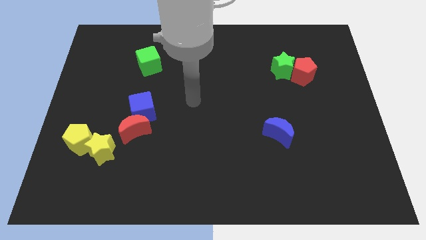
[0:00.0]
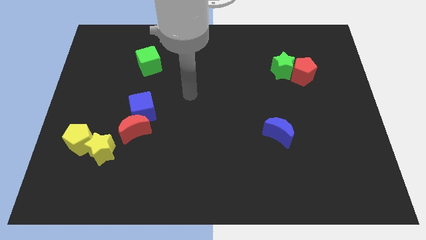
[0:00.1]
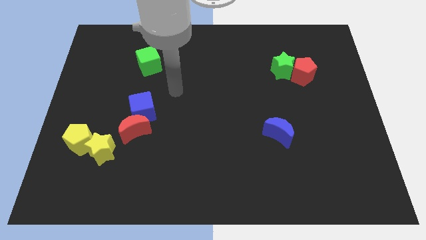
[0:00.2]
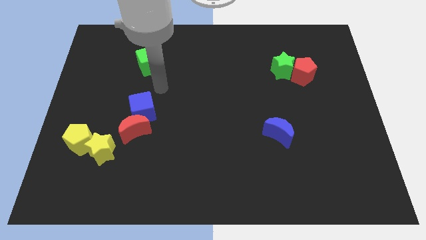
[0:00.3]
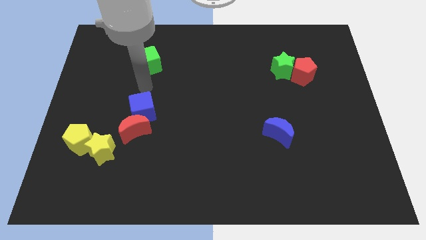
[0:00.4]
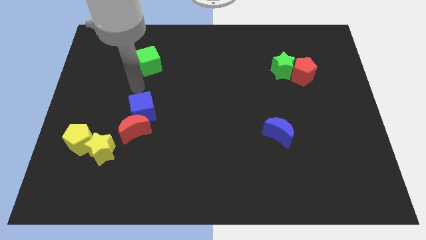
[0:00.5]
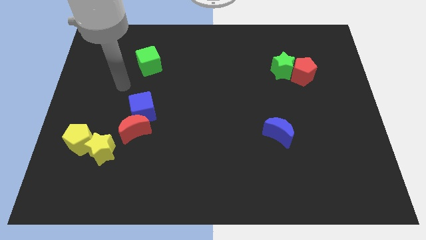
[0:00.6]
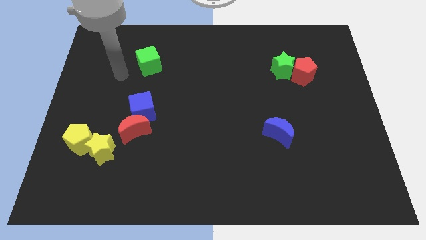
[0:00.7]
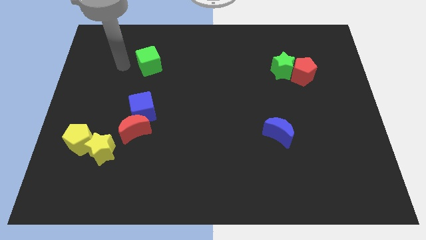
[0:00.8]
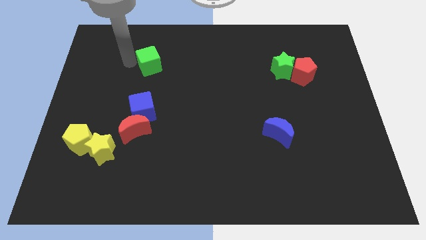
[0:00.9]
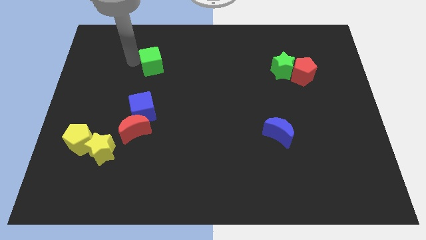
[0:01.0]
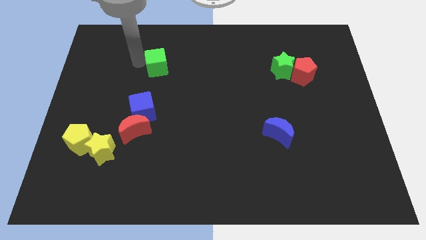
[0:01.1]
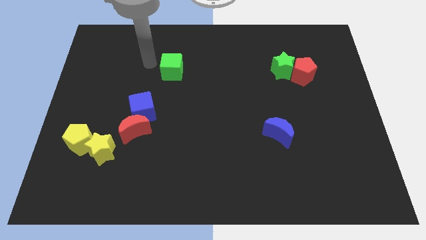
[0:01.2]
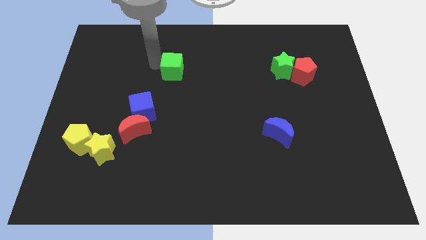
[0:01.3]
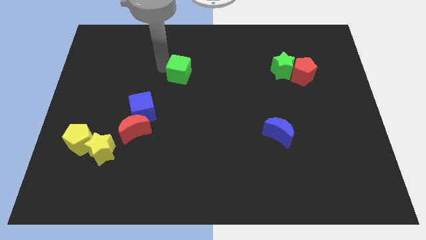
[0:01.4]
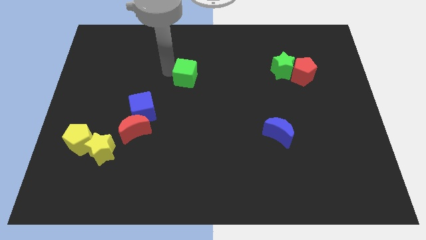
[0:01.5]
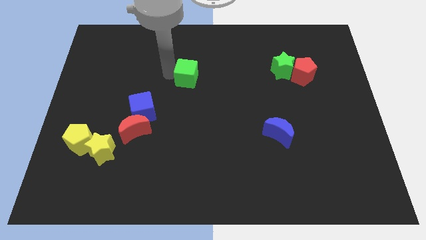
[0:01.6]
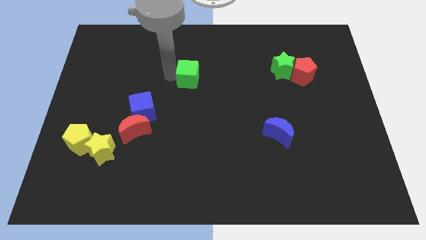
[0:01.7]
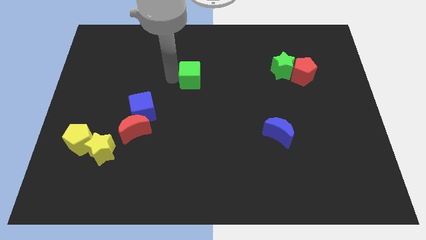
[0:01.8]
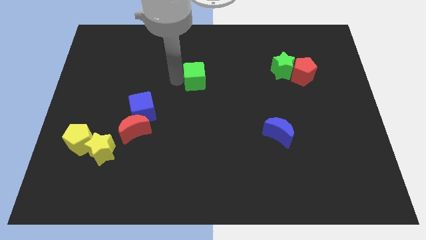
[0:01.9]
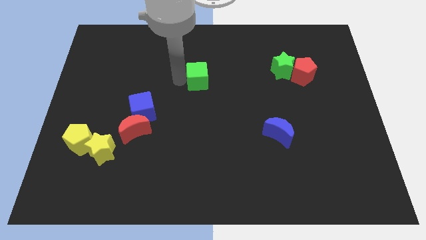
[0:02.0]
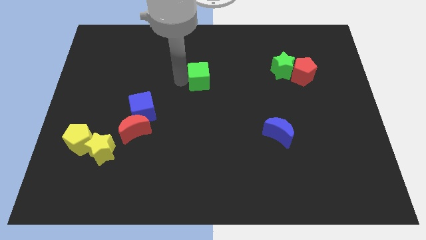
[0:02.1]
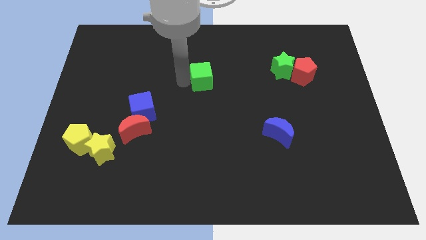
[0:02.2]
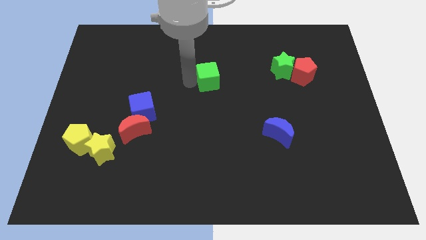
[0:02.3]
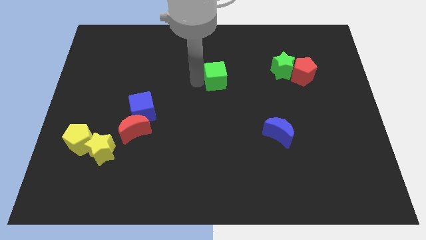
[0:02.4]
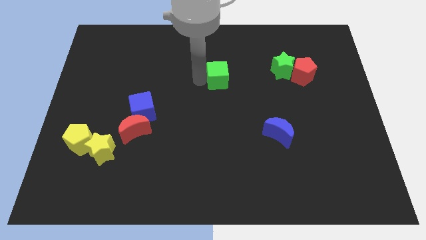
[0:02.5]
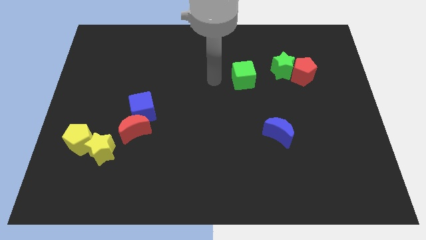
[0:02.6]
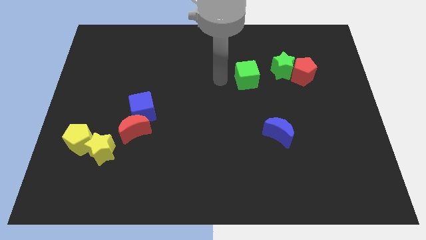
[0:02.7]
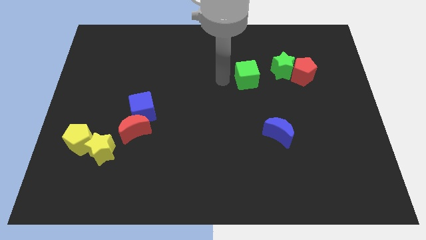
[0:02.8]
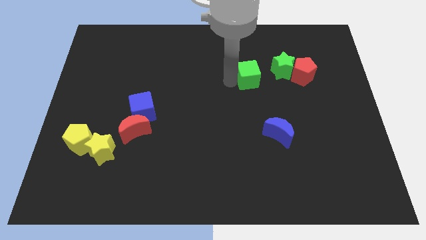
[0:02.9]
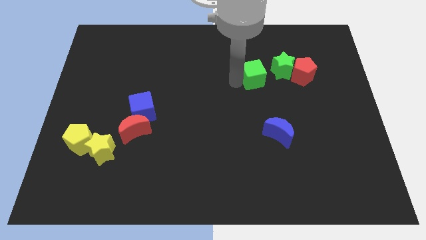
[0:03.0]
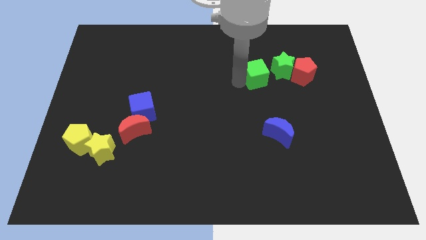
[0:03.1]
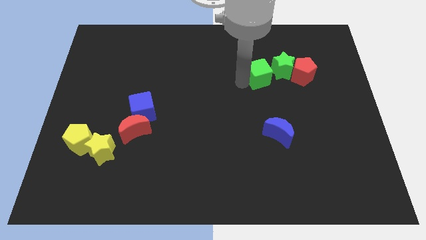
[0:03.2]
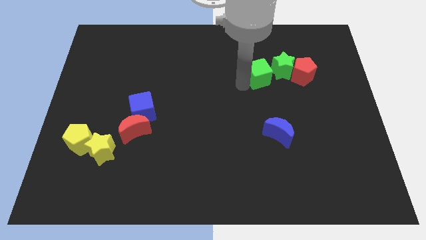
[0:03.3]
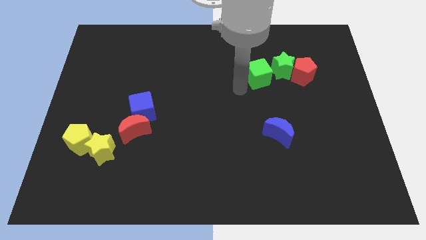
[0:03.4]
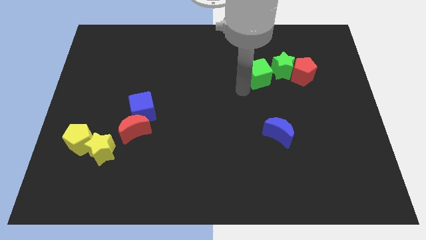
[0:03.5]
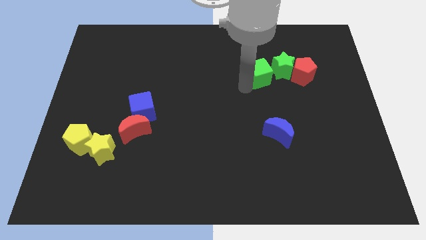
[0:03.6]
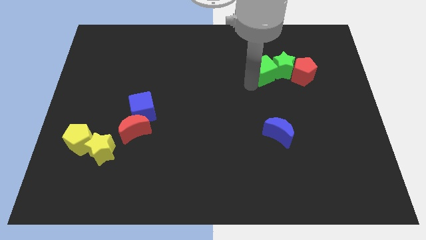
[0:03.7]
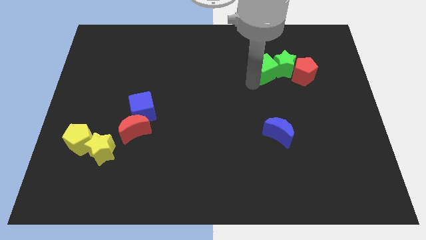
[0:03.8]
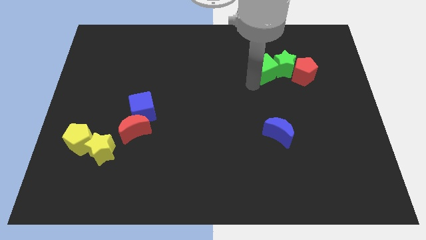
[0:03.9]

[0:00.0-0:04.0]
push the green cube to the left of the green star

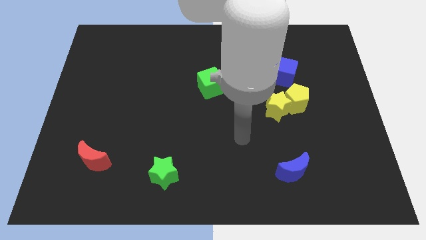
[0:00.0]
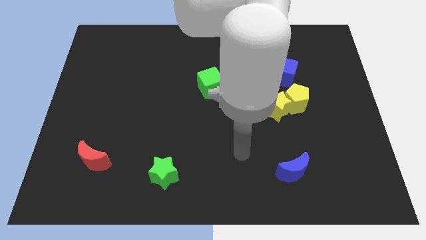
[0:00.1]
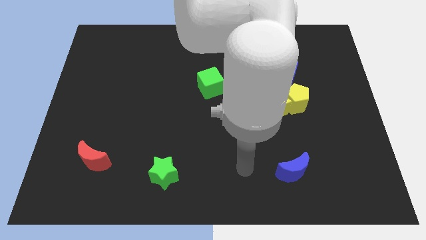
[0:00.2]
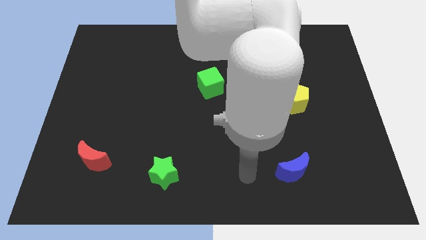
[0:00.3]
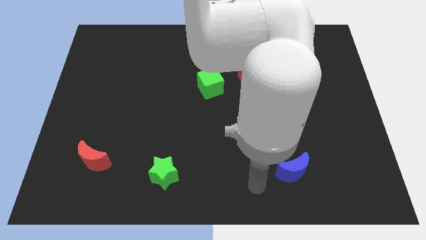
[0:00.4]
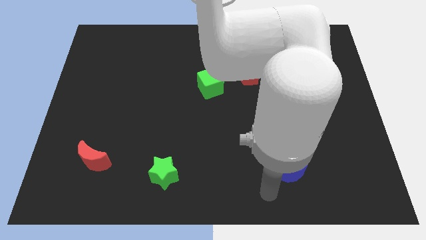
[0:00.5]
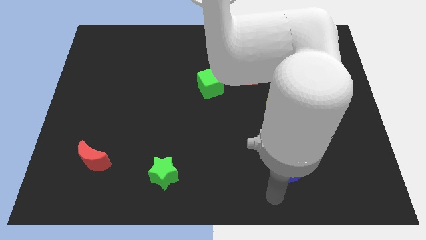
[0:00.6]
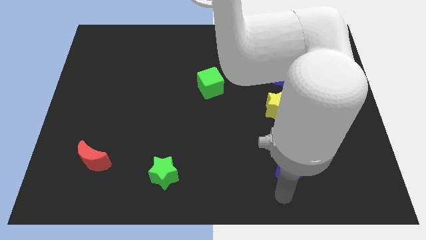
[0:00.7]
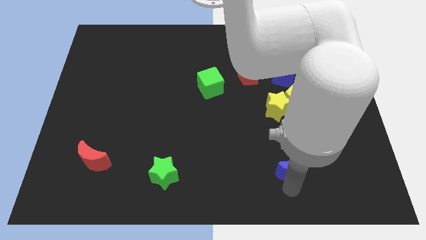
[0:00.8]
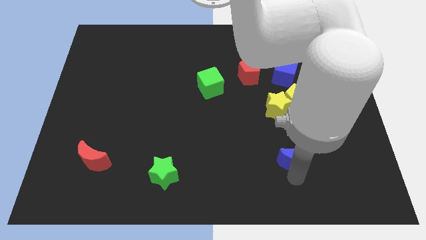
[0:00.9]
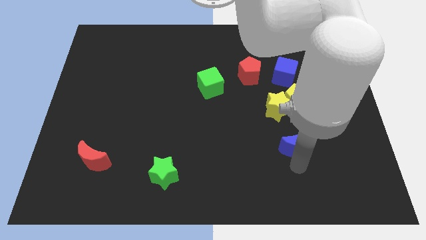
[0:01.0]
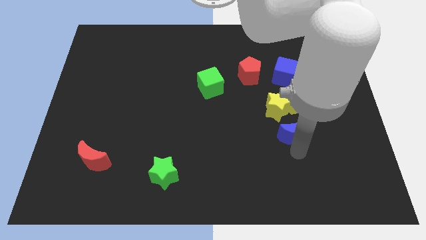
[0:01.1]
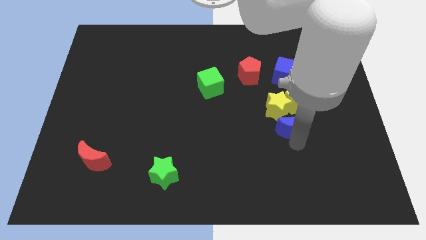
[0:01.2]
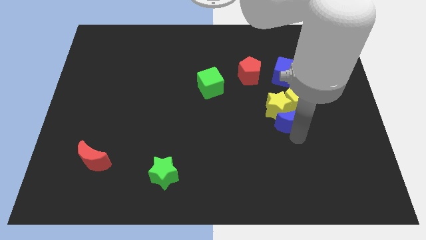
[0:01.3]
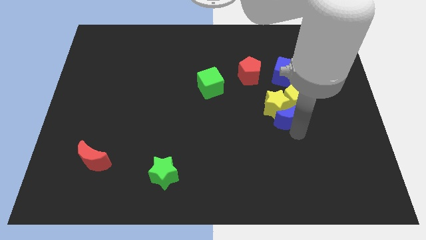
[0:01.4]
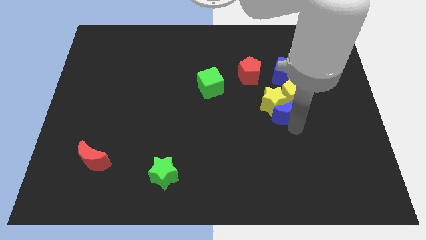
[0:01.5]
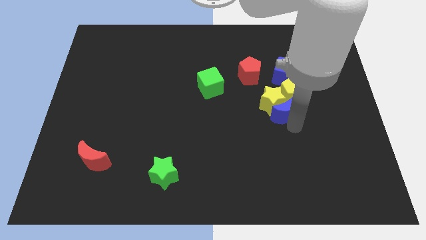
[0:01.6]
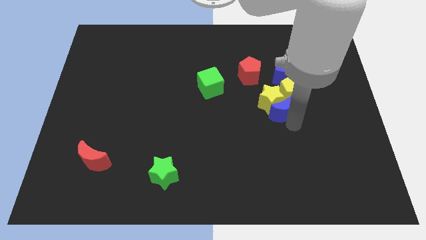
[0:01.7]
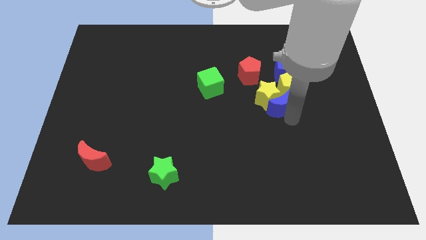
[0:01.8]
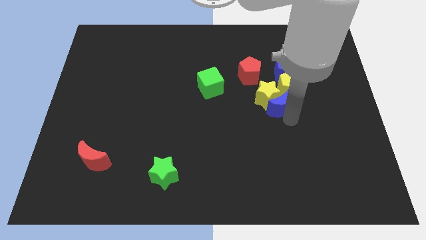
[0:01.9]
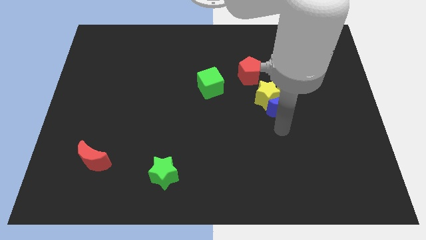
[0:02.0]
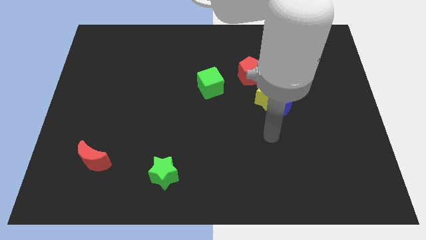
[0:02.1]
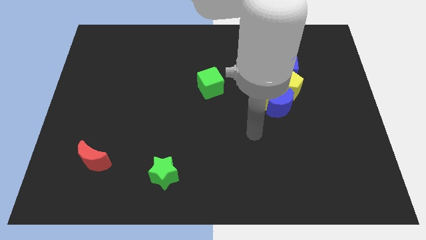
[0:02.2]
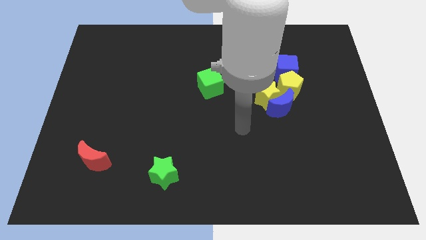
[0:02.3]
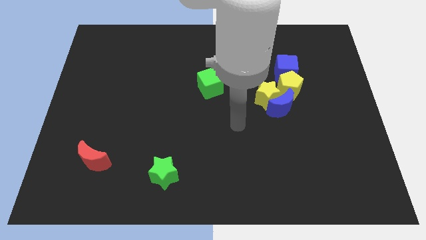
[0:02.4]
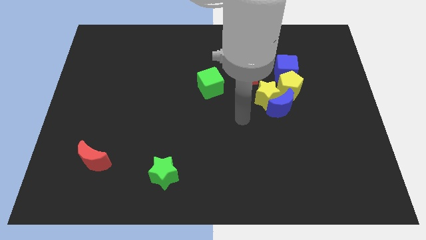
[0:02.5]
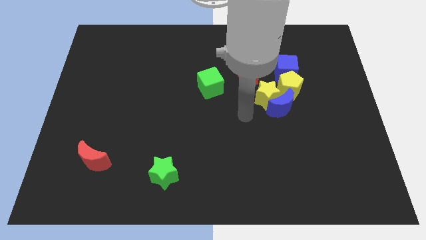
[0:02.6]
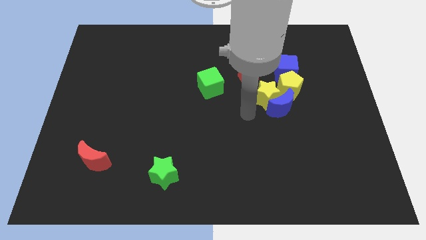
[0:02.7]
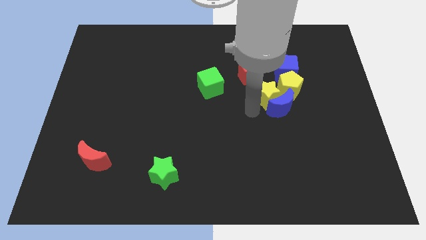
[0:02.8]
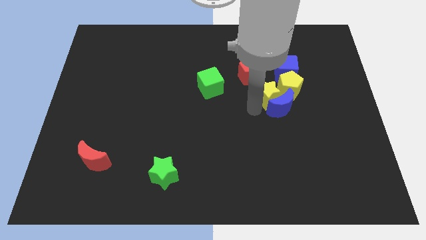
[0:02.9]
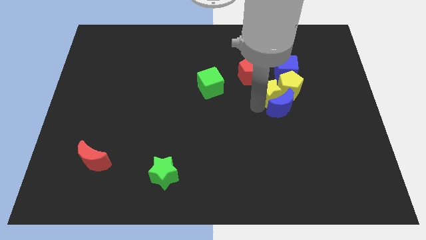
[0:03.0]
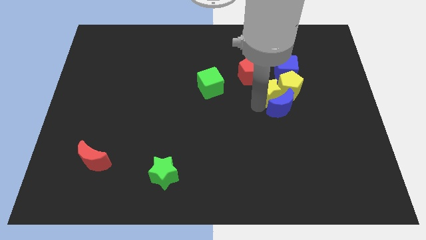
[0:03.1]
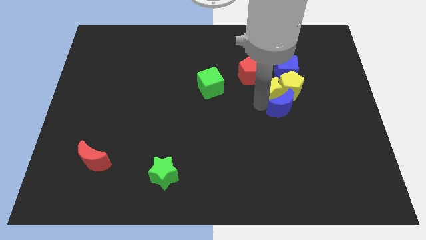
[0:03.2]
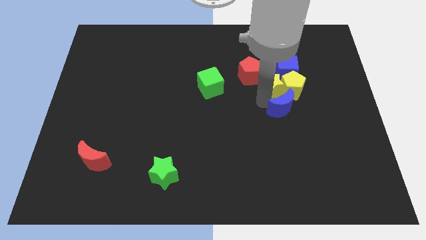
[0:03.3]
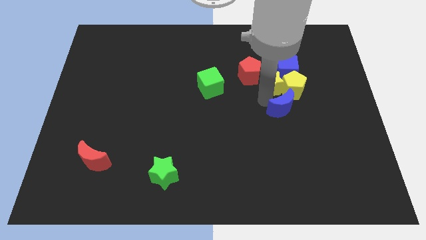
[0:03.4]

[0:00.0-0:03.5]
push the blue moon into the group of blocks

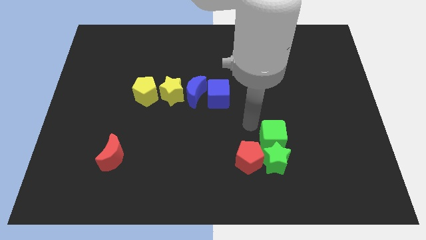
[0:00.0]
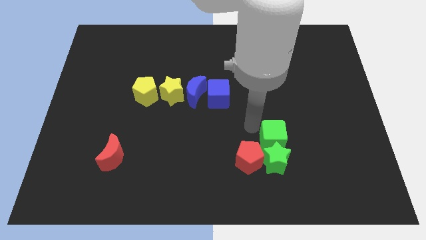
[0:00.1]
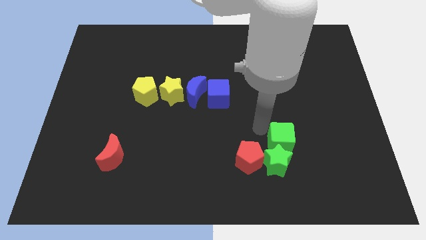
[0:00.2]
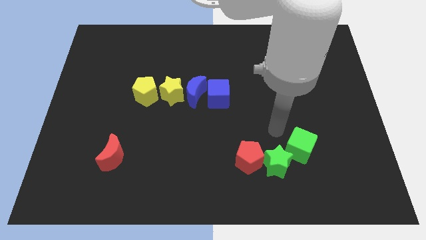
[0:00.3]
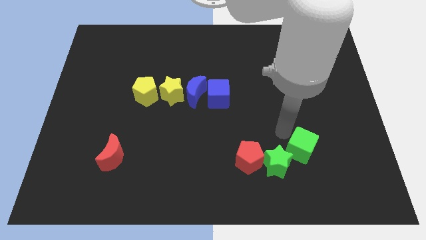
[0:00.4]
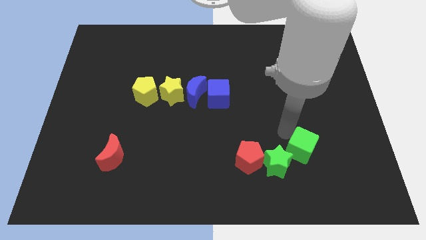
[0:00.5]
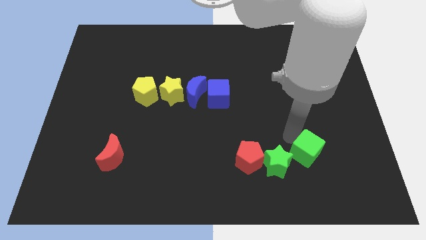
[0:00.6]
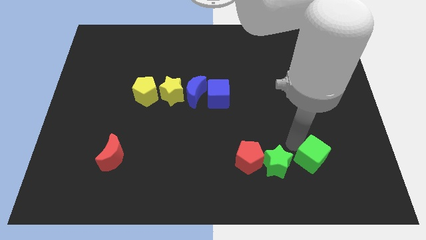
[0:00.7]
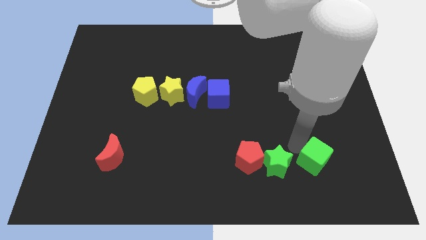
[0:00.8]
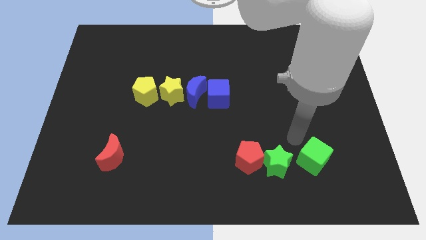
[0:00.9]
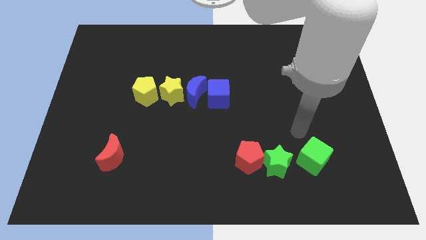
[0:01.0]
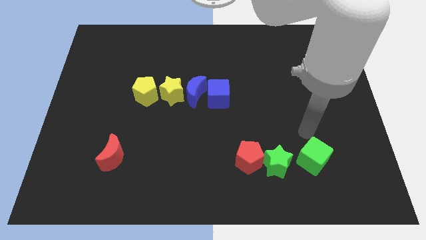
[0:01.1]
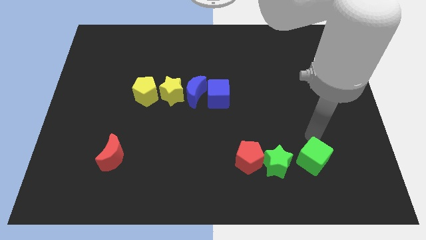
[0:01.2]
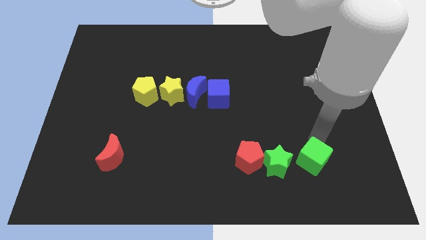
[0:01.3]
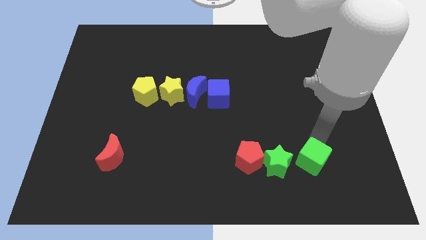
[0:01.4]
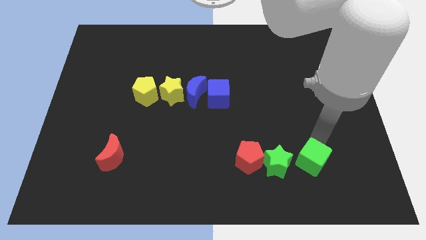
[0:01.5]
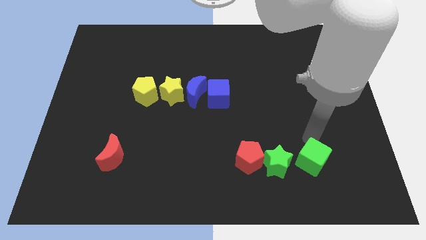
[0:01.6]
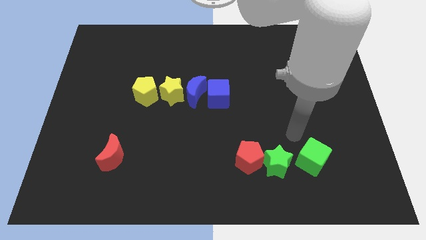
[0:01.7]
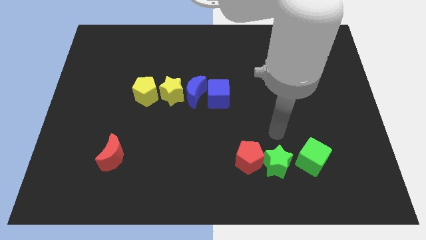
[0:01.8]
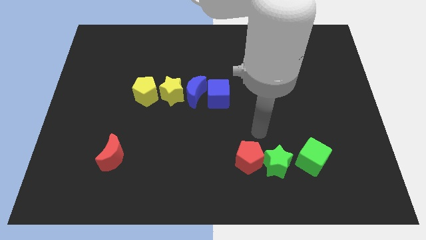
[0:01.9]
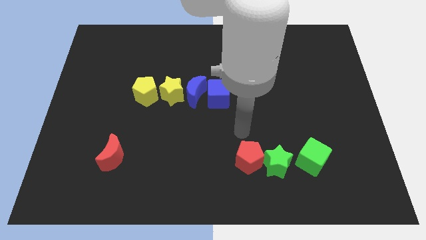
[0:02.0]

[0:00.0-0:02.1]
place the green cube to the right side of the green star
